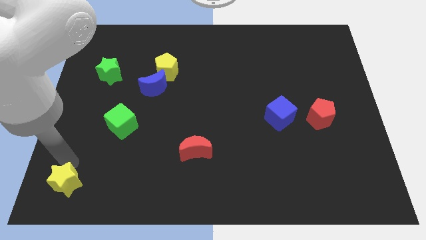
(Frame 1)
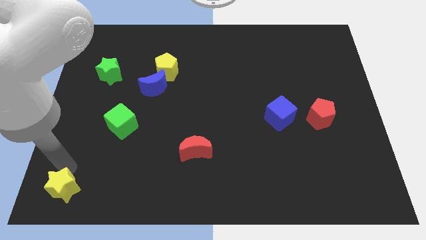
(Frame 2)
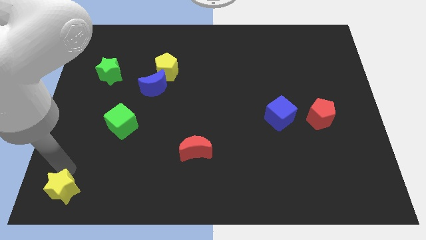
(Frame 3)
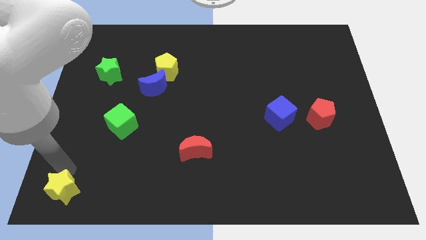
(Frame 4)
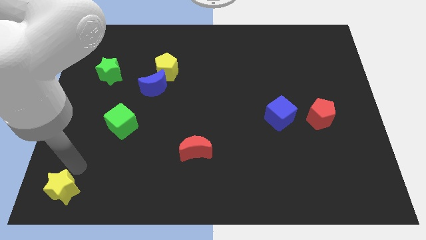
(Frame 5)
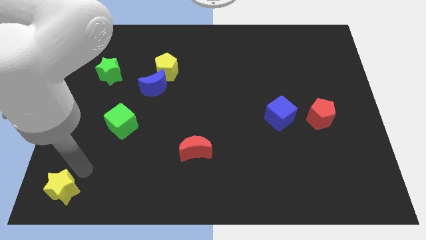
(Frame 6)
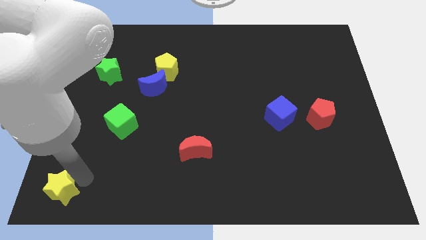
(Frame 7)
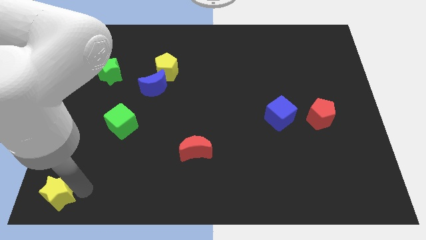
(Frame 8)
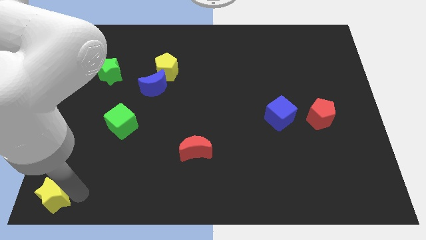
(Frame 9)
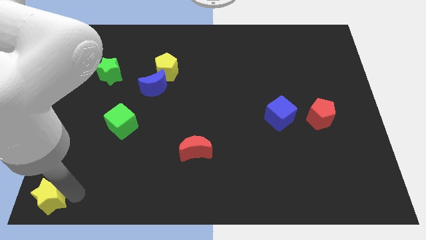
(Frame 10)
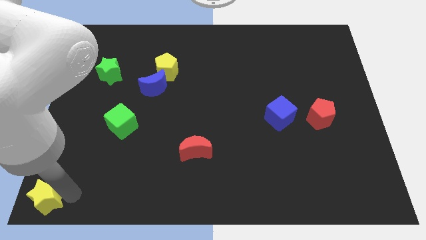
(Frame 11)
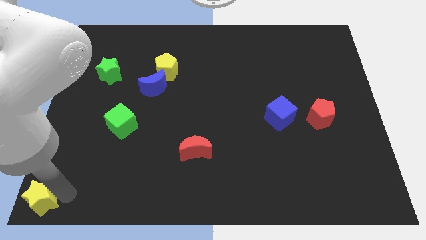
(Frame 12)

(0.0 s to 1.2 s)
move yellow star to the bottom left corner

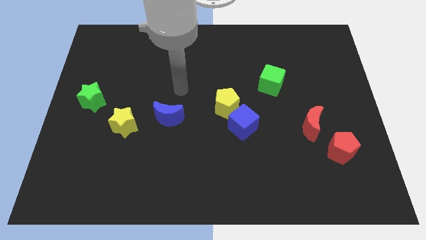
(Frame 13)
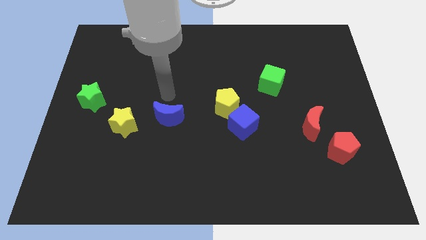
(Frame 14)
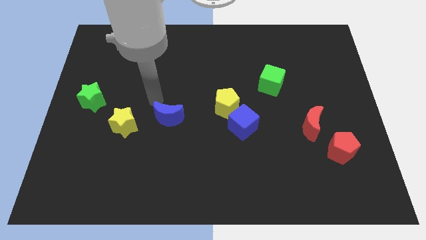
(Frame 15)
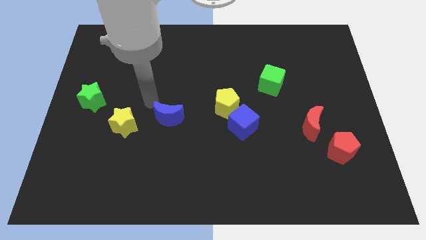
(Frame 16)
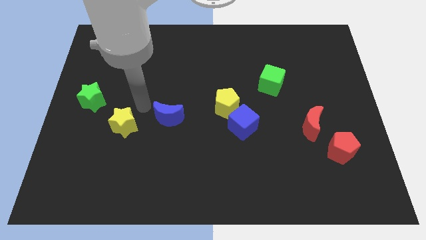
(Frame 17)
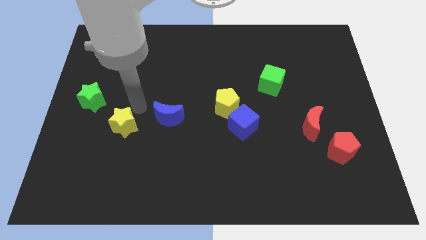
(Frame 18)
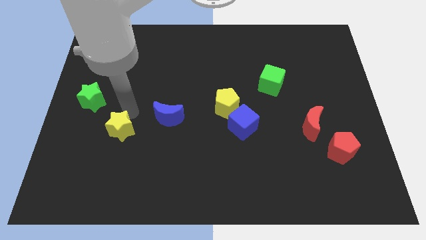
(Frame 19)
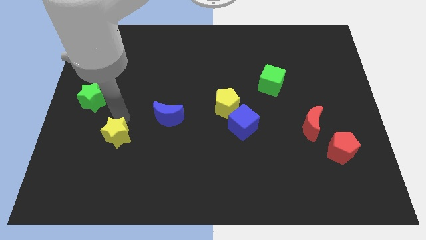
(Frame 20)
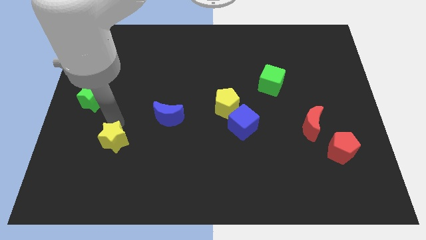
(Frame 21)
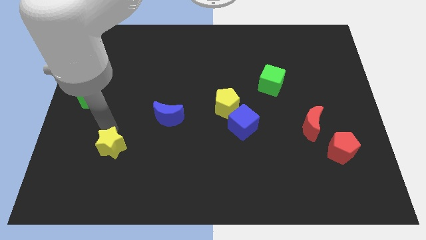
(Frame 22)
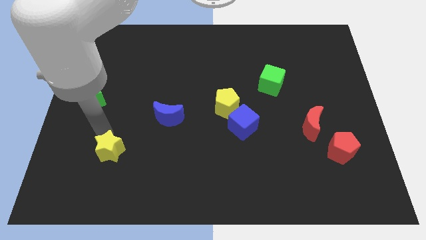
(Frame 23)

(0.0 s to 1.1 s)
push the yellow star towards the bottom right

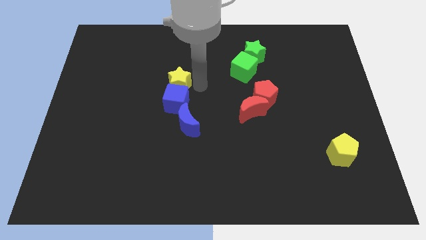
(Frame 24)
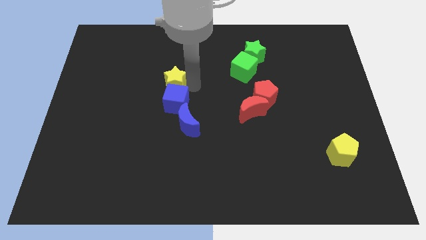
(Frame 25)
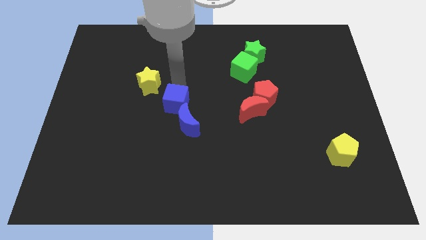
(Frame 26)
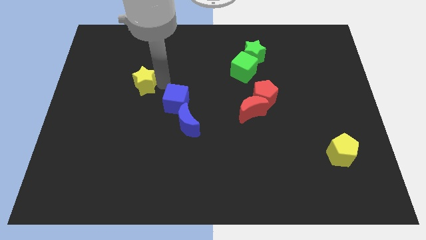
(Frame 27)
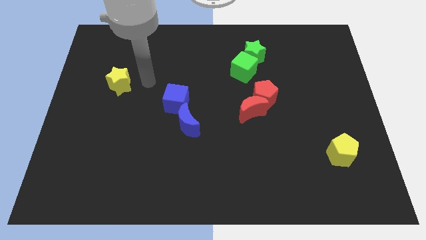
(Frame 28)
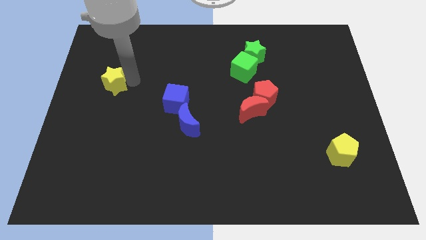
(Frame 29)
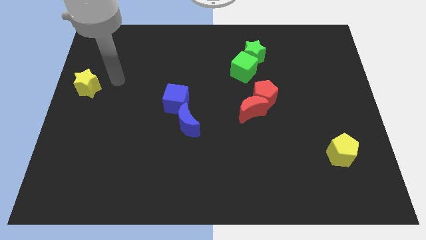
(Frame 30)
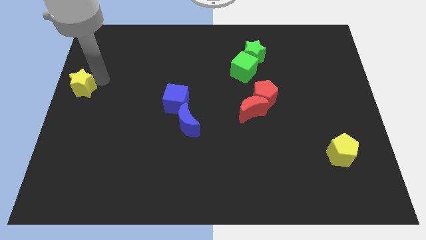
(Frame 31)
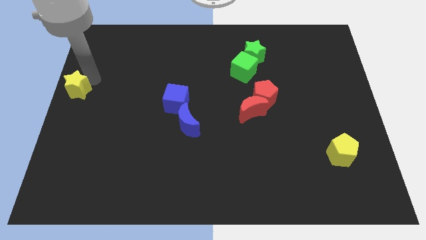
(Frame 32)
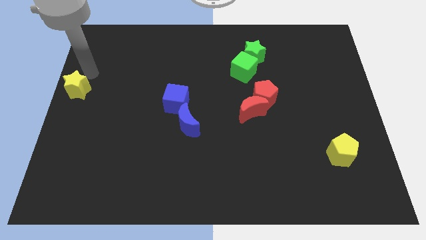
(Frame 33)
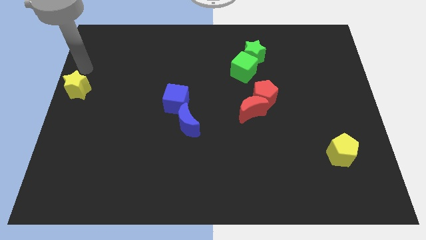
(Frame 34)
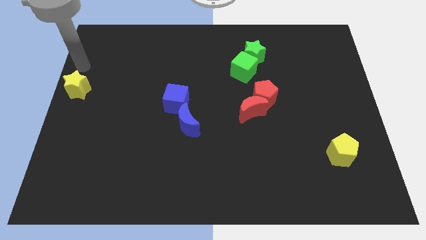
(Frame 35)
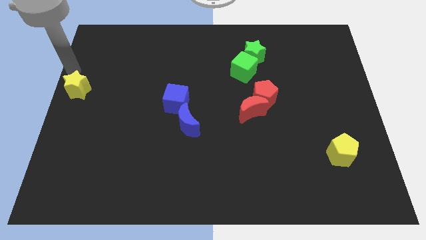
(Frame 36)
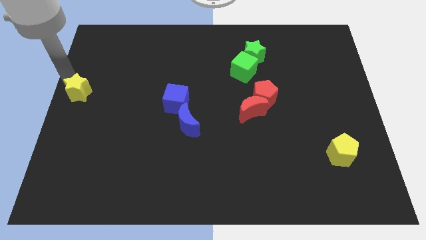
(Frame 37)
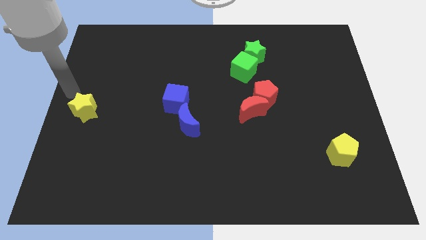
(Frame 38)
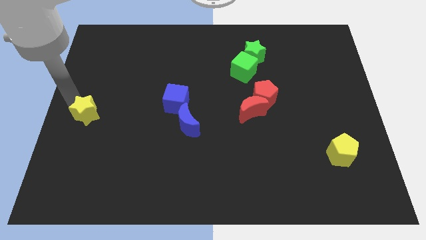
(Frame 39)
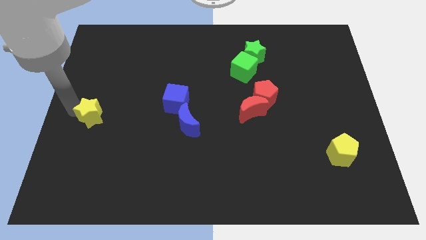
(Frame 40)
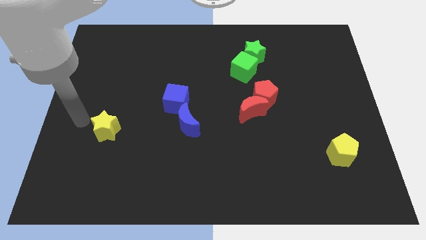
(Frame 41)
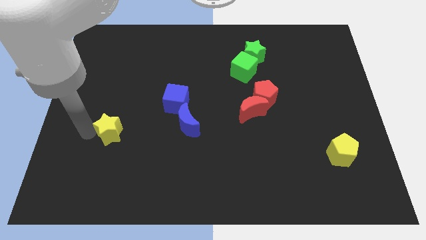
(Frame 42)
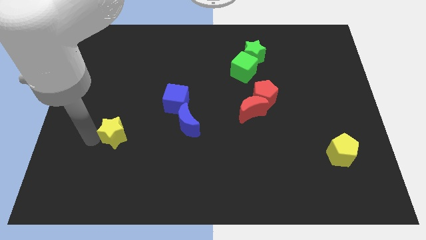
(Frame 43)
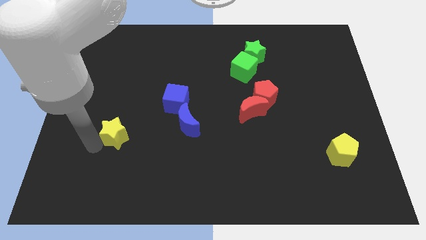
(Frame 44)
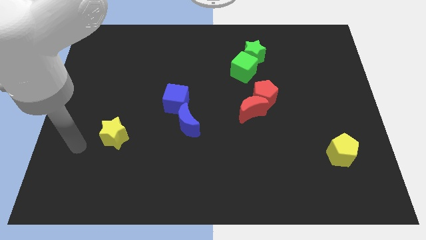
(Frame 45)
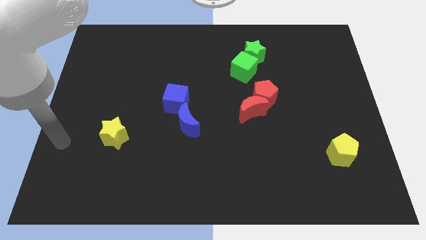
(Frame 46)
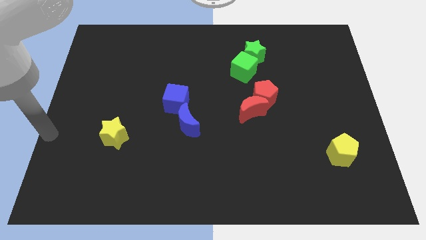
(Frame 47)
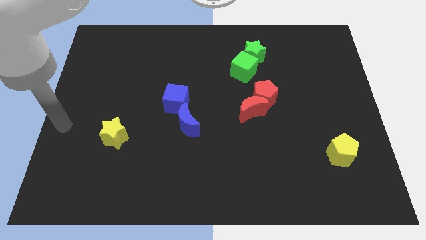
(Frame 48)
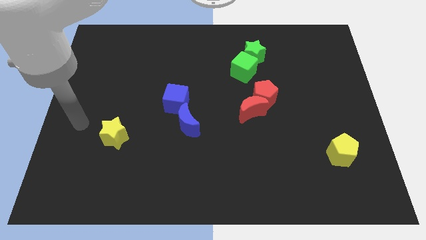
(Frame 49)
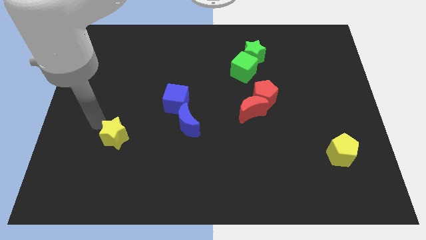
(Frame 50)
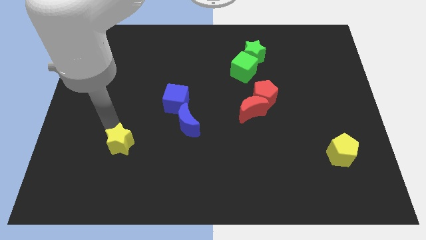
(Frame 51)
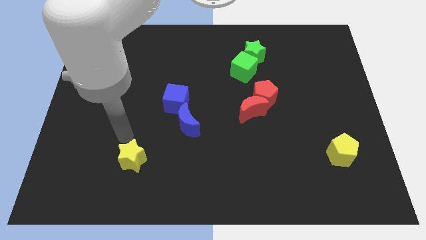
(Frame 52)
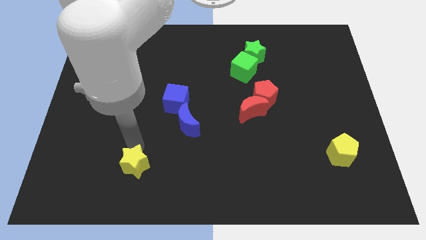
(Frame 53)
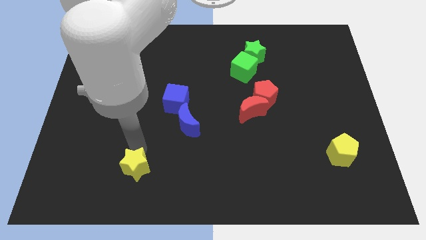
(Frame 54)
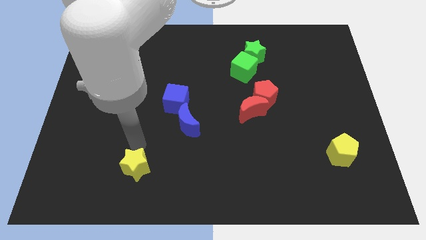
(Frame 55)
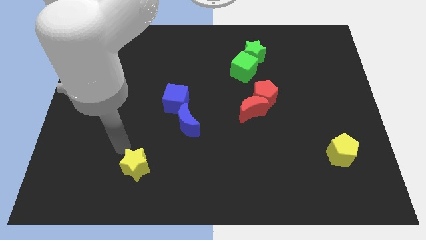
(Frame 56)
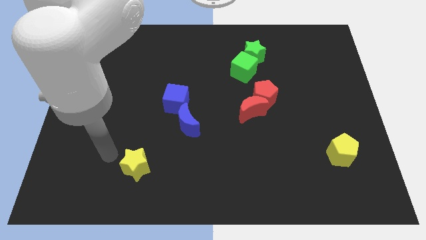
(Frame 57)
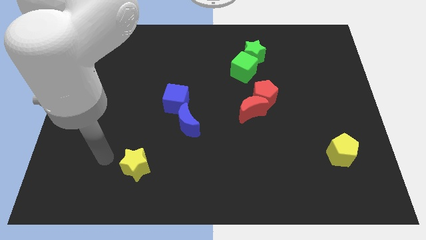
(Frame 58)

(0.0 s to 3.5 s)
move the yellow star towards the bottom left of the board

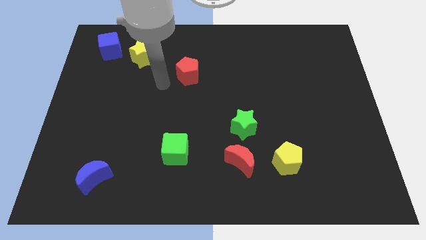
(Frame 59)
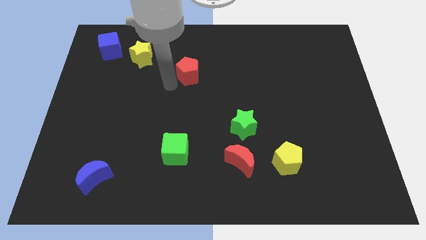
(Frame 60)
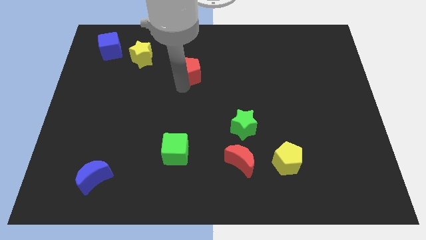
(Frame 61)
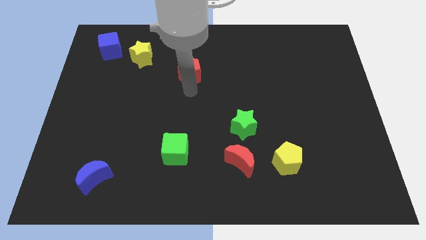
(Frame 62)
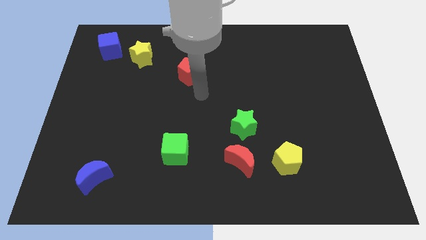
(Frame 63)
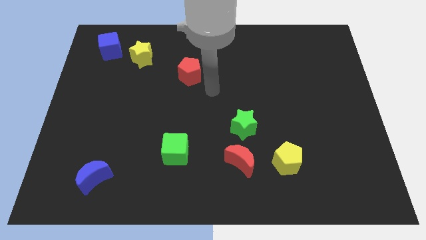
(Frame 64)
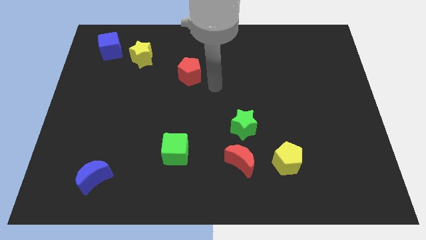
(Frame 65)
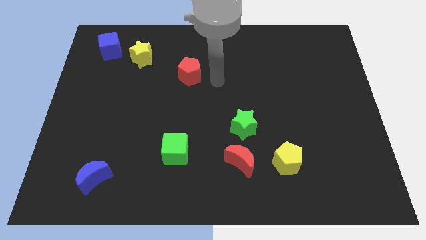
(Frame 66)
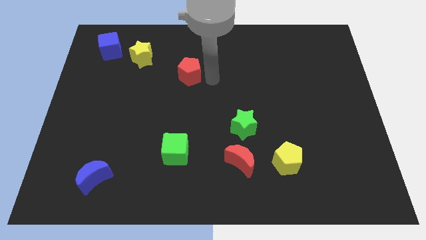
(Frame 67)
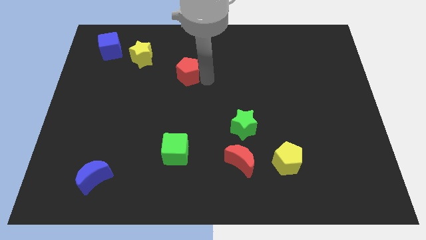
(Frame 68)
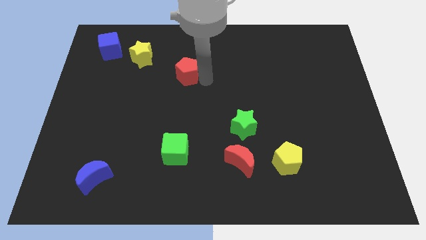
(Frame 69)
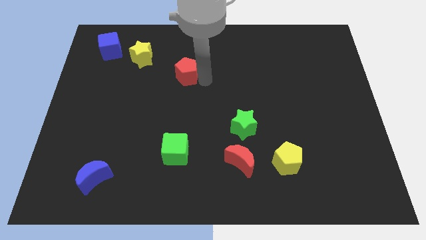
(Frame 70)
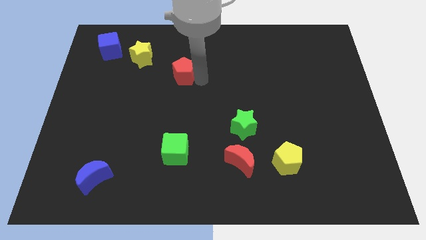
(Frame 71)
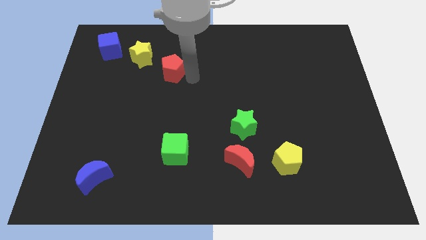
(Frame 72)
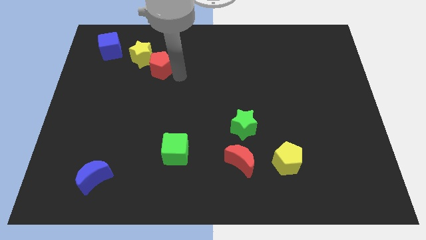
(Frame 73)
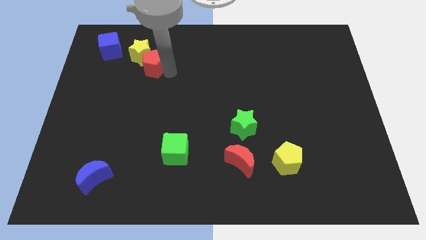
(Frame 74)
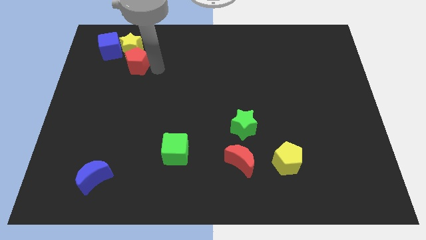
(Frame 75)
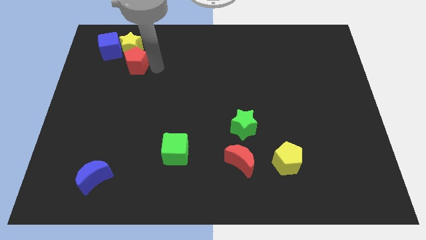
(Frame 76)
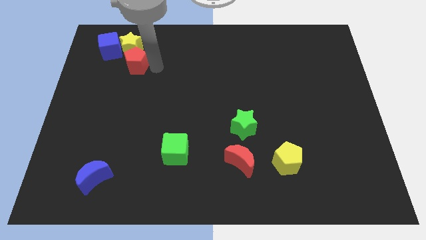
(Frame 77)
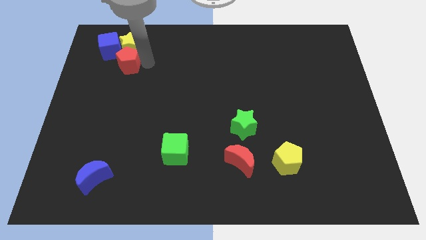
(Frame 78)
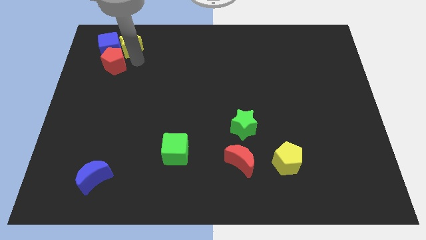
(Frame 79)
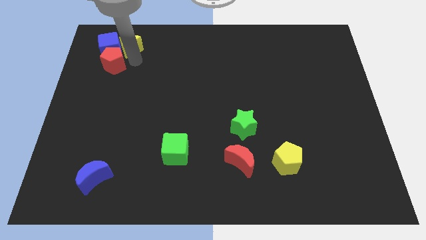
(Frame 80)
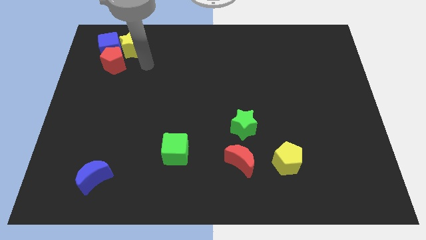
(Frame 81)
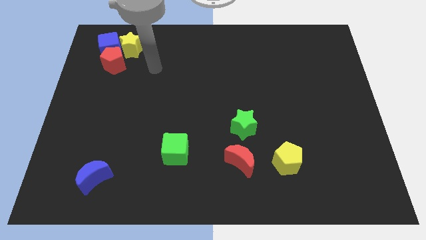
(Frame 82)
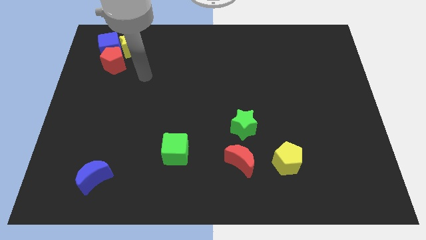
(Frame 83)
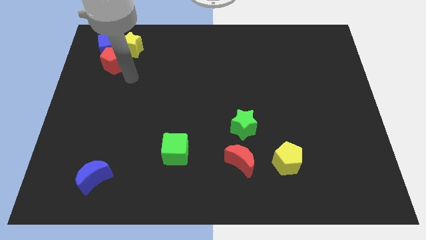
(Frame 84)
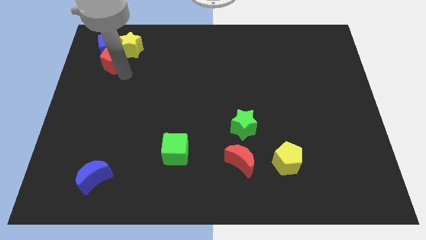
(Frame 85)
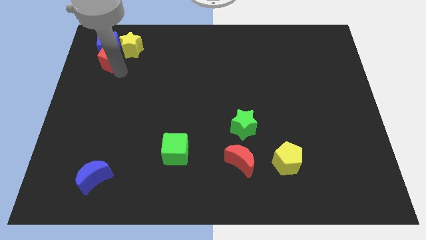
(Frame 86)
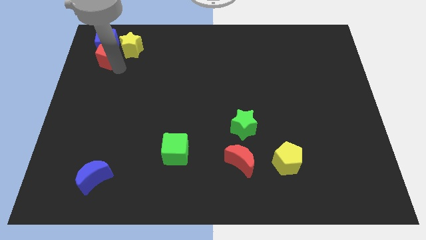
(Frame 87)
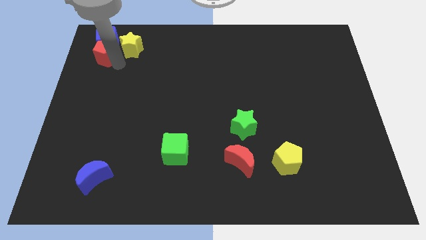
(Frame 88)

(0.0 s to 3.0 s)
move the red pentagon at the bottom of the blue cube

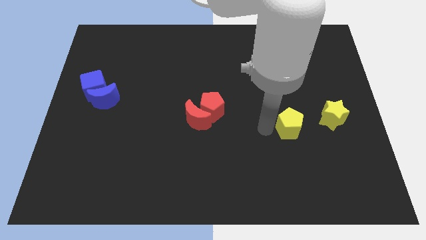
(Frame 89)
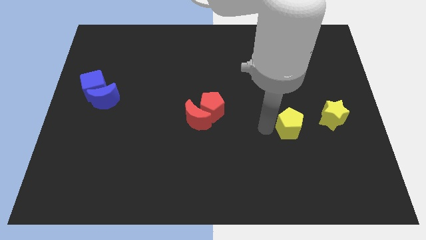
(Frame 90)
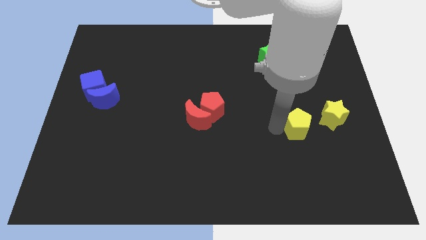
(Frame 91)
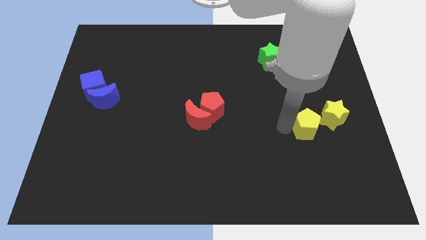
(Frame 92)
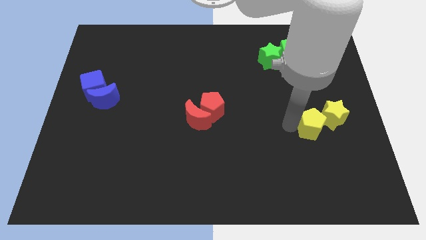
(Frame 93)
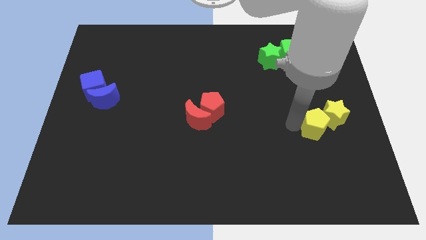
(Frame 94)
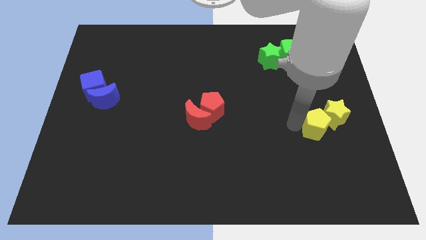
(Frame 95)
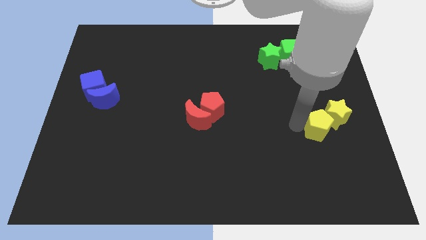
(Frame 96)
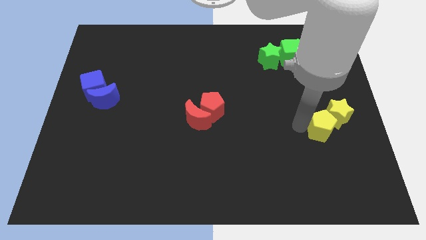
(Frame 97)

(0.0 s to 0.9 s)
push the yellow pentagon into the yellow star
